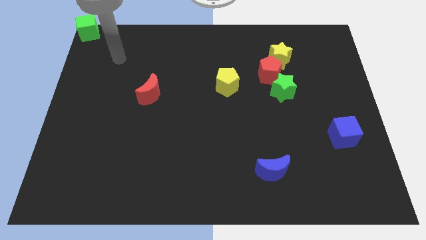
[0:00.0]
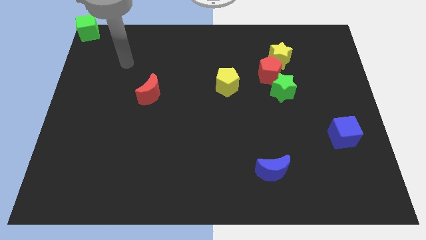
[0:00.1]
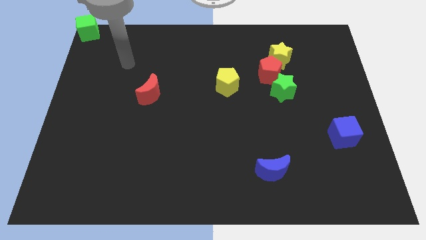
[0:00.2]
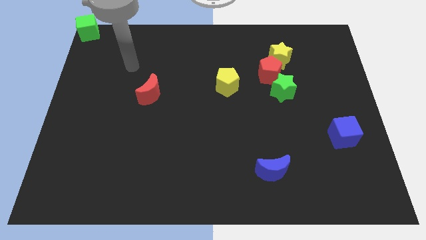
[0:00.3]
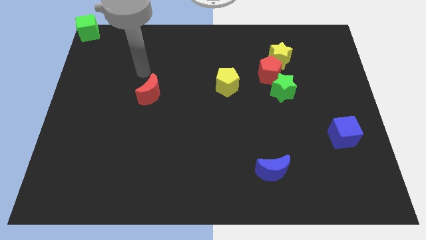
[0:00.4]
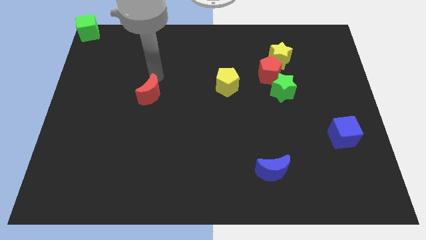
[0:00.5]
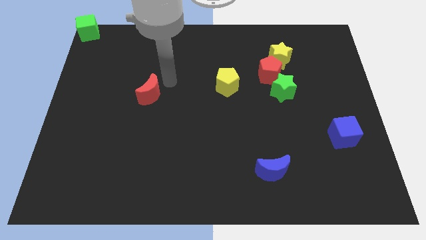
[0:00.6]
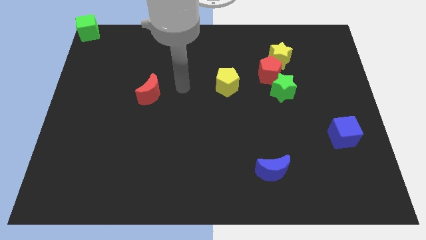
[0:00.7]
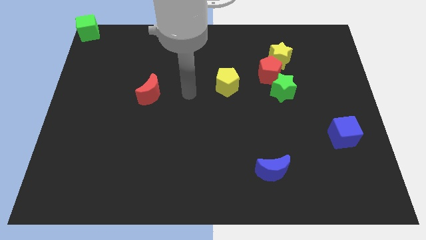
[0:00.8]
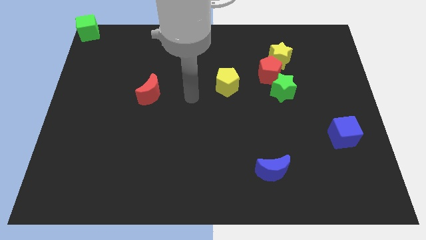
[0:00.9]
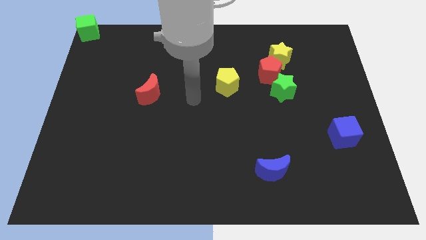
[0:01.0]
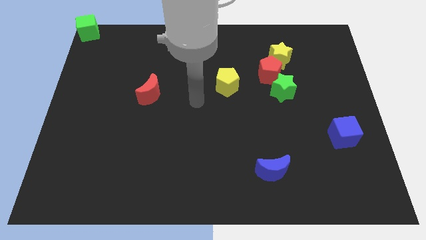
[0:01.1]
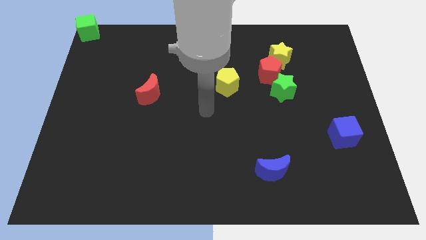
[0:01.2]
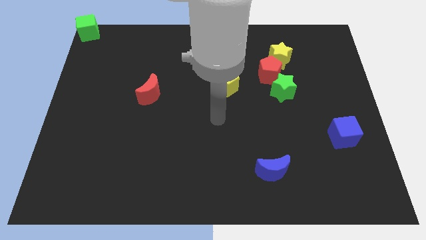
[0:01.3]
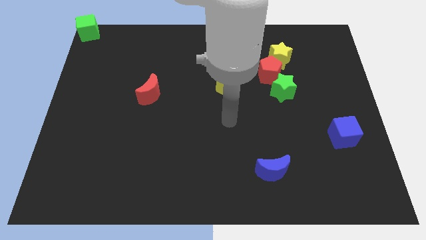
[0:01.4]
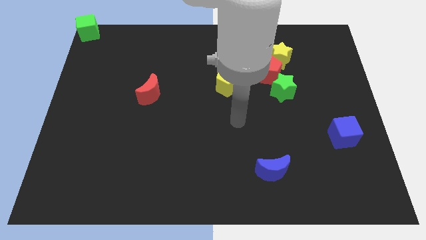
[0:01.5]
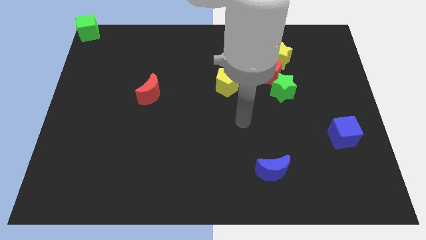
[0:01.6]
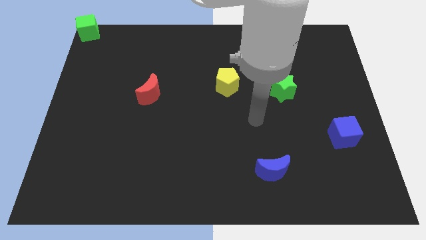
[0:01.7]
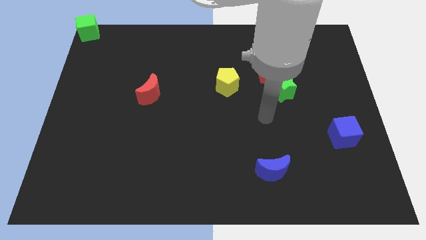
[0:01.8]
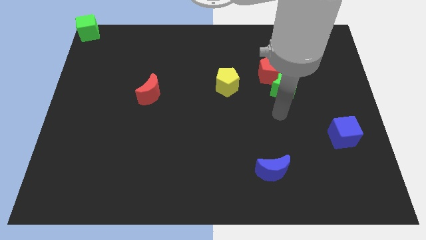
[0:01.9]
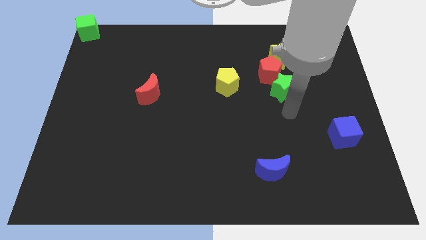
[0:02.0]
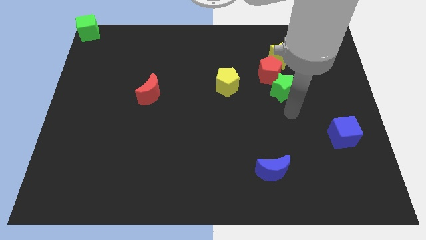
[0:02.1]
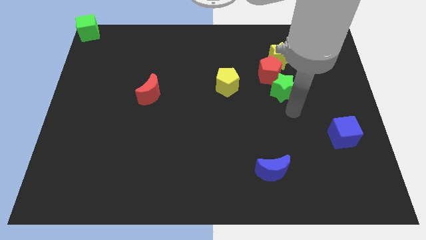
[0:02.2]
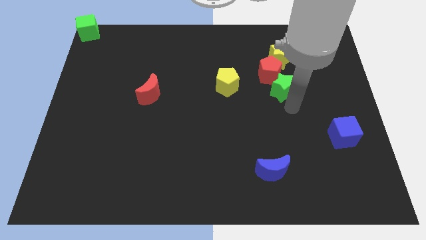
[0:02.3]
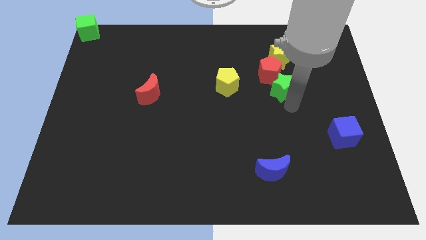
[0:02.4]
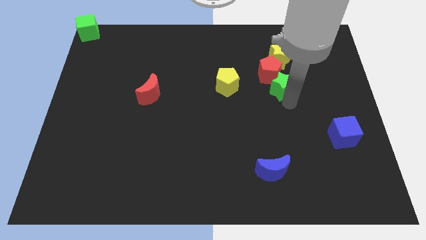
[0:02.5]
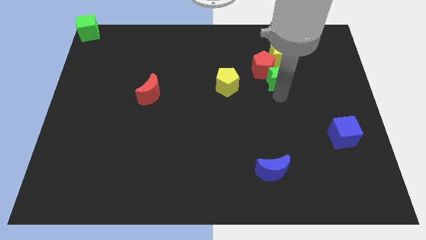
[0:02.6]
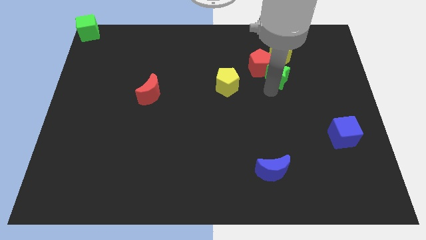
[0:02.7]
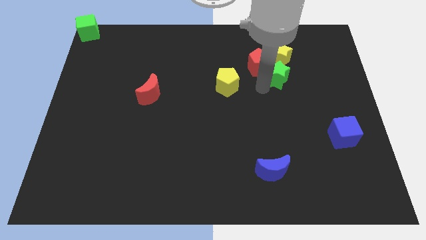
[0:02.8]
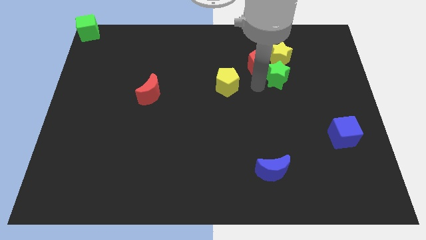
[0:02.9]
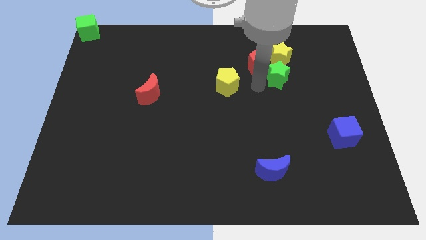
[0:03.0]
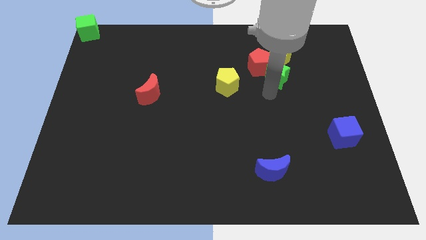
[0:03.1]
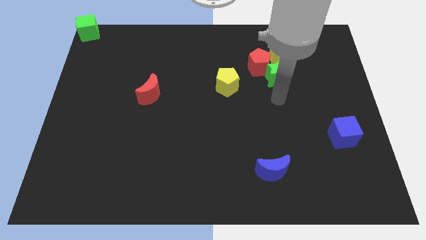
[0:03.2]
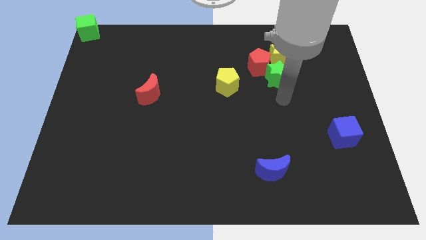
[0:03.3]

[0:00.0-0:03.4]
push the red pentagon and green star to the bottom left of the yellow star

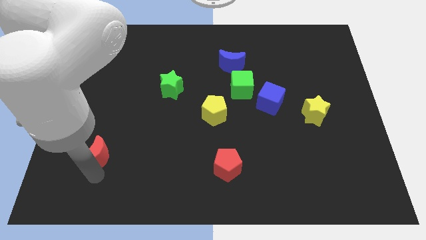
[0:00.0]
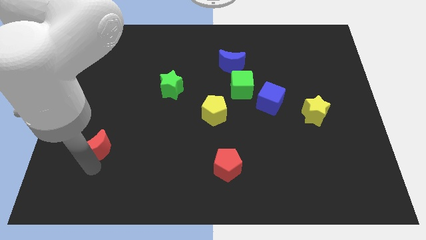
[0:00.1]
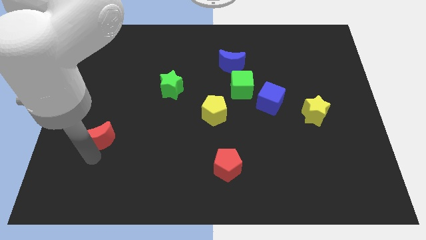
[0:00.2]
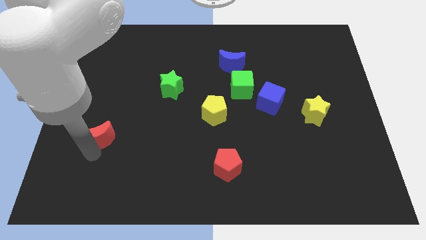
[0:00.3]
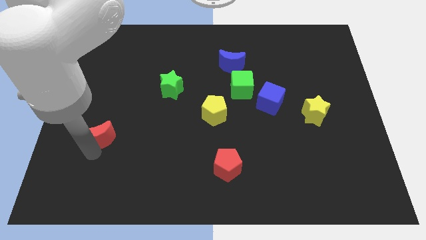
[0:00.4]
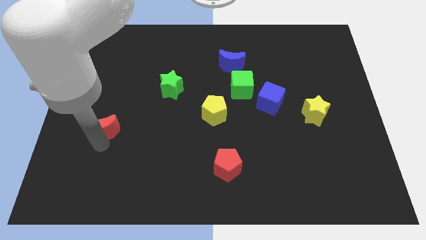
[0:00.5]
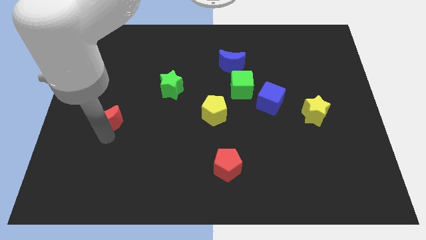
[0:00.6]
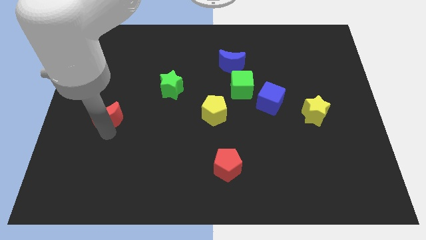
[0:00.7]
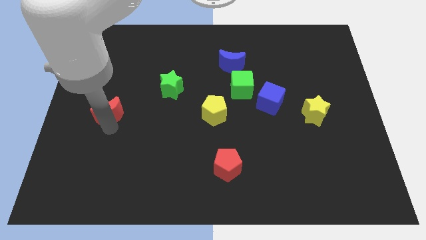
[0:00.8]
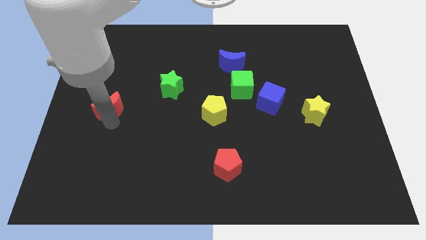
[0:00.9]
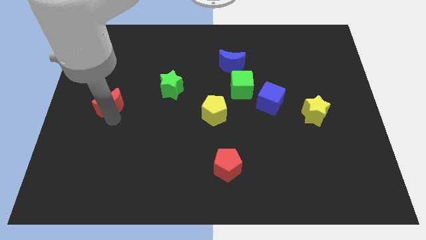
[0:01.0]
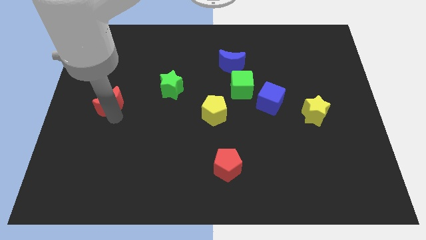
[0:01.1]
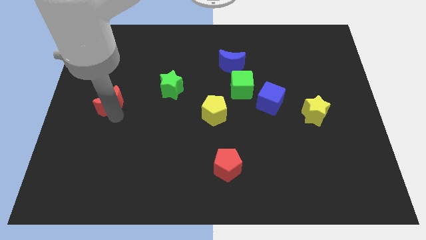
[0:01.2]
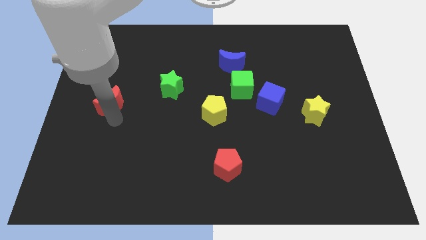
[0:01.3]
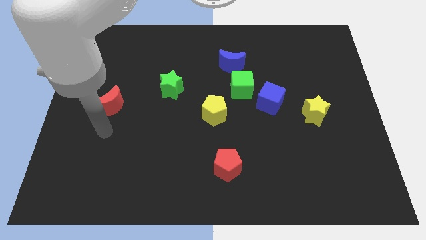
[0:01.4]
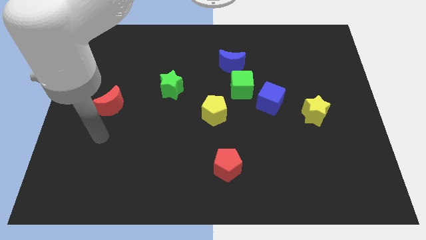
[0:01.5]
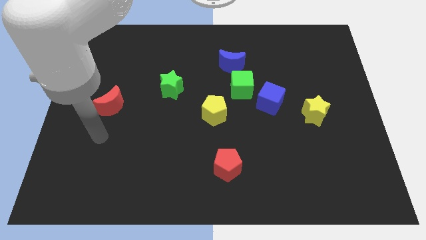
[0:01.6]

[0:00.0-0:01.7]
move the red moon diagonally on the bottom left side of the green star

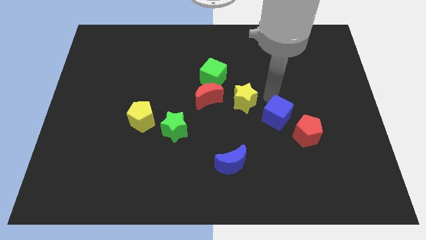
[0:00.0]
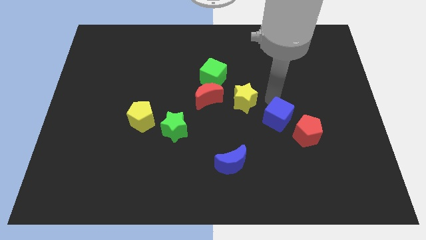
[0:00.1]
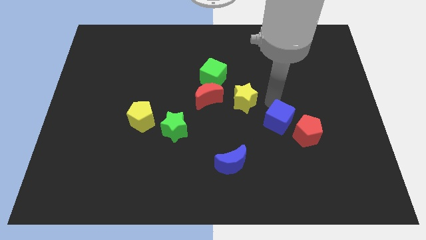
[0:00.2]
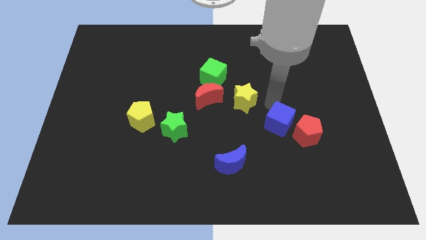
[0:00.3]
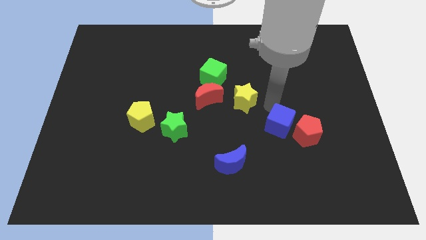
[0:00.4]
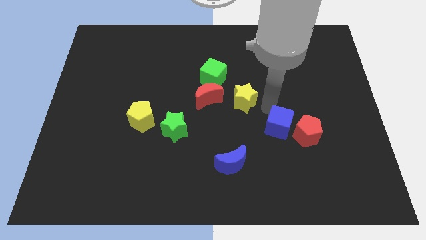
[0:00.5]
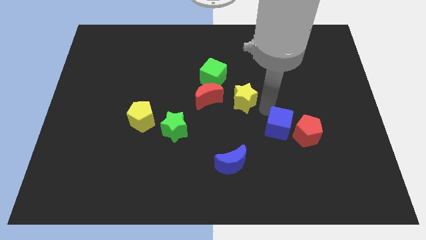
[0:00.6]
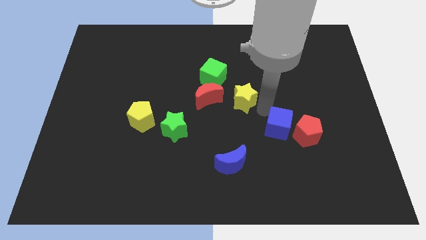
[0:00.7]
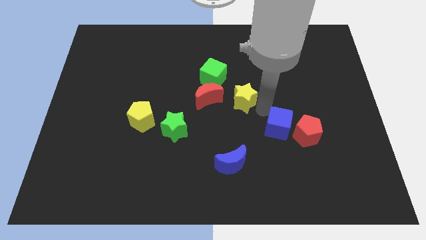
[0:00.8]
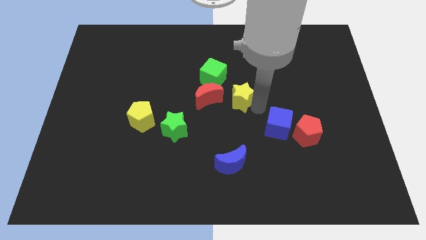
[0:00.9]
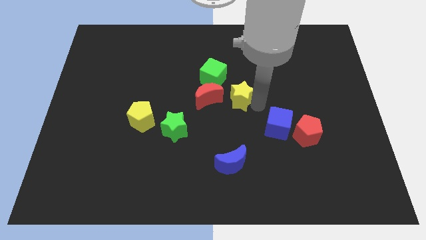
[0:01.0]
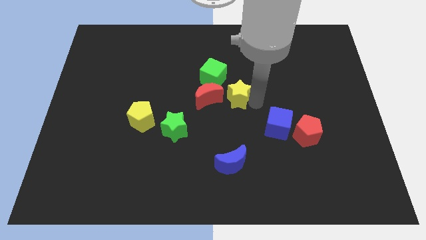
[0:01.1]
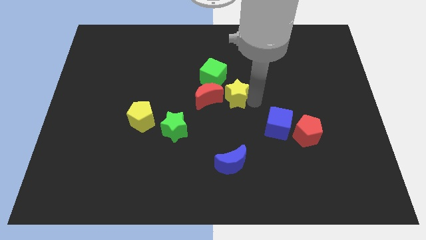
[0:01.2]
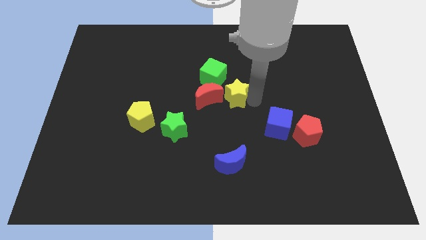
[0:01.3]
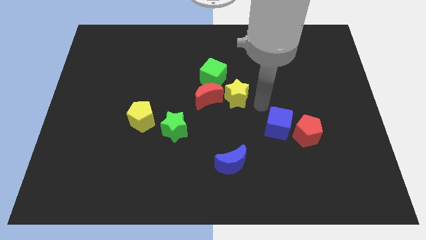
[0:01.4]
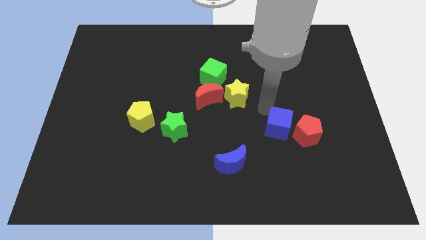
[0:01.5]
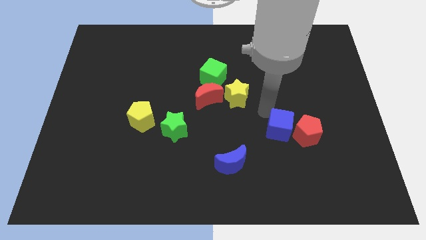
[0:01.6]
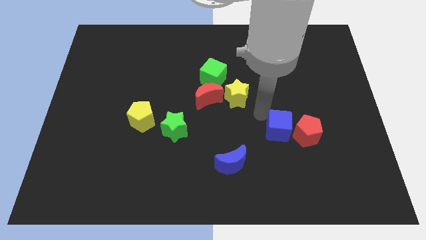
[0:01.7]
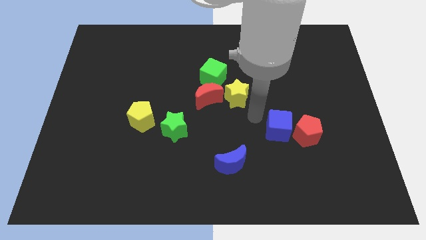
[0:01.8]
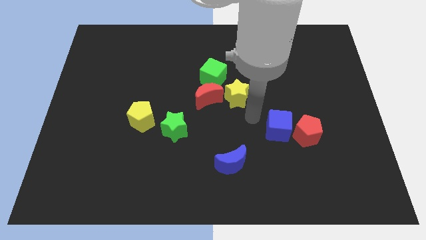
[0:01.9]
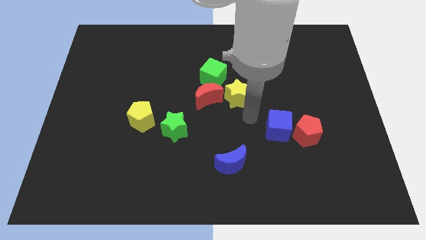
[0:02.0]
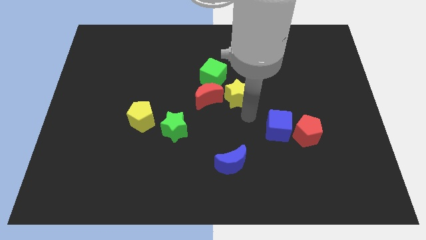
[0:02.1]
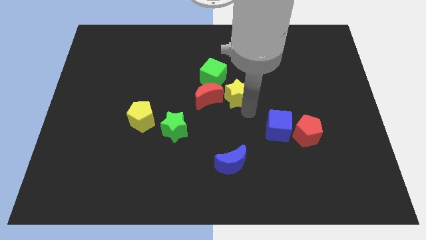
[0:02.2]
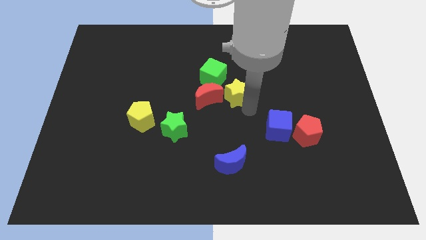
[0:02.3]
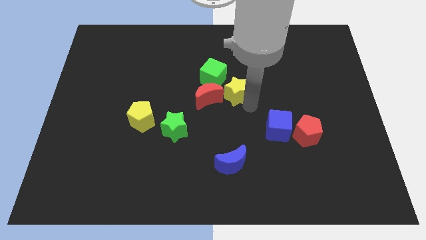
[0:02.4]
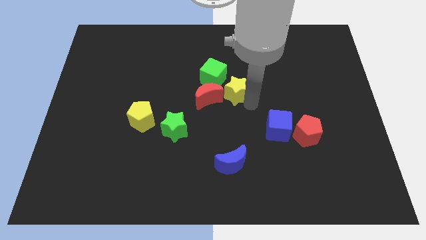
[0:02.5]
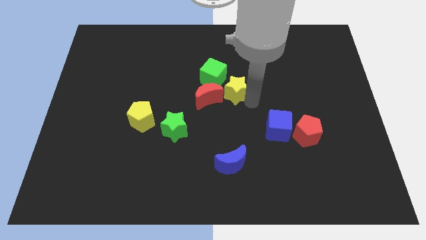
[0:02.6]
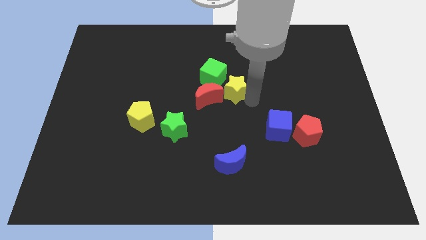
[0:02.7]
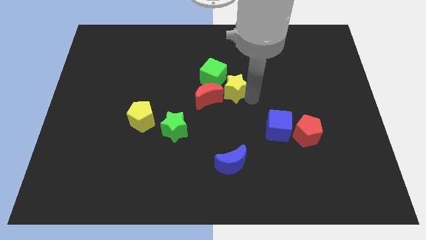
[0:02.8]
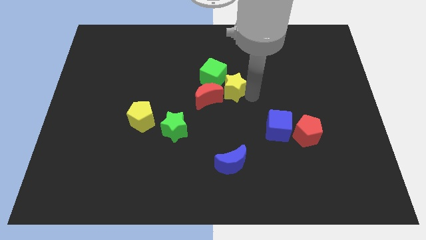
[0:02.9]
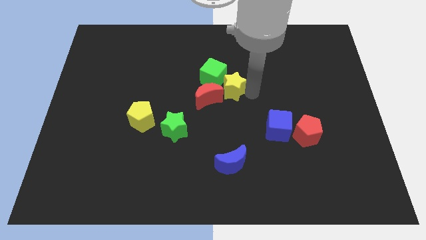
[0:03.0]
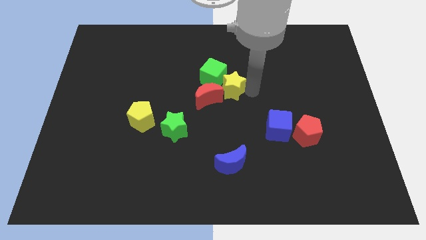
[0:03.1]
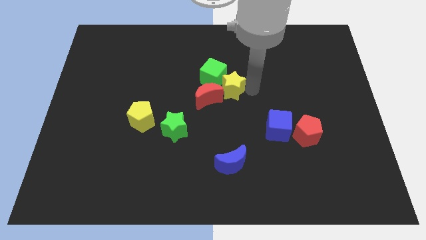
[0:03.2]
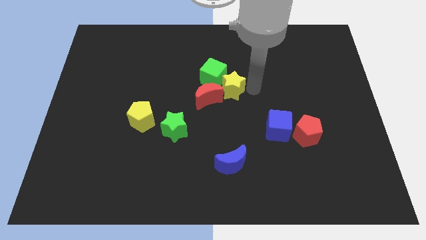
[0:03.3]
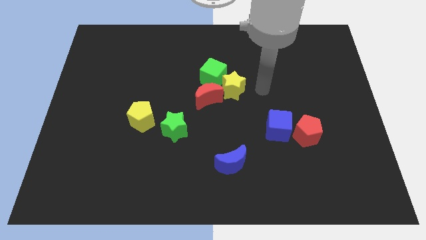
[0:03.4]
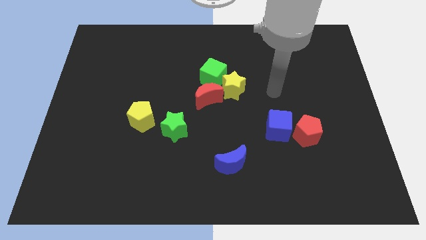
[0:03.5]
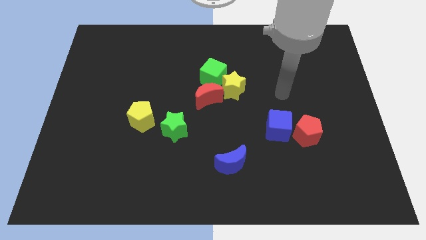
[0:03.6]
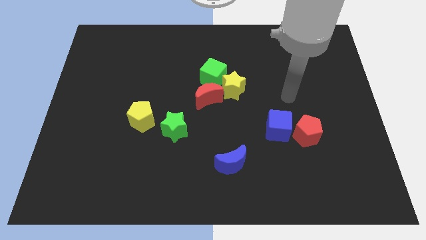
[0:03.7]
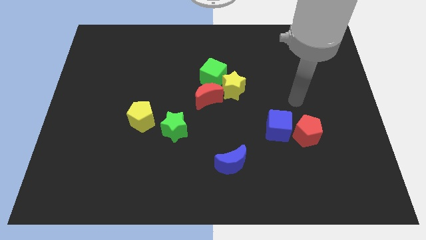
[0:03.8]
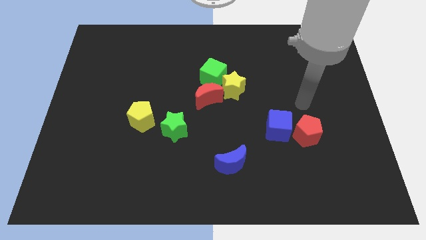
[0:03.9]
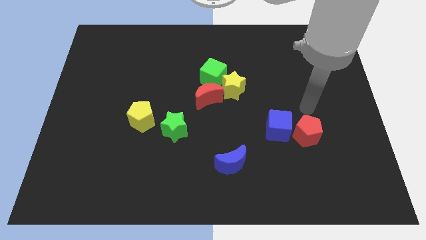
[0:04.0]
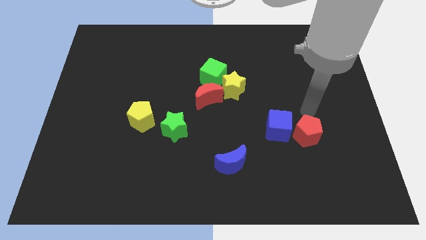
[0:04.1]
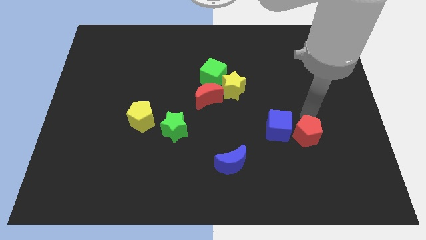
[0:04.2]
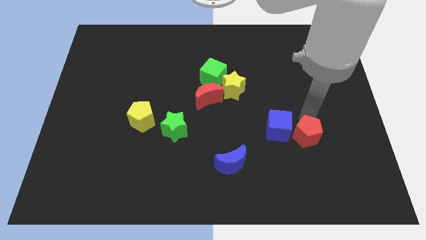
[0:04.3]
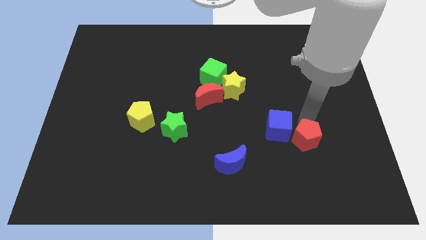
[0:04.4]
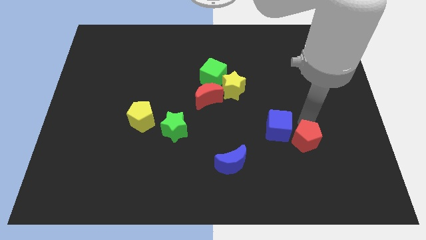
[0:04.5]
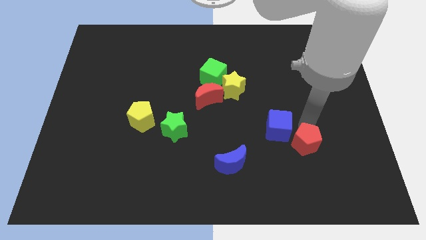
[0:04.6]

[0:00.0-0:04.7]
move the yellow star into the green cube
